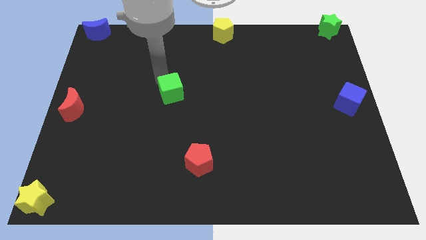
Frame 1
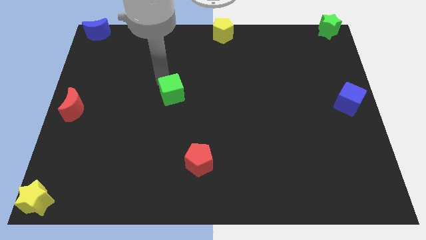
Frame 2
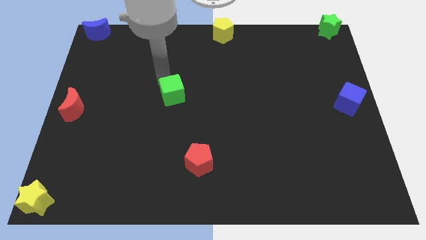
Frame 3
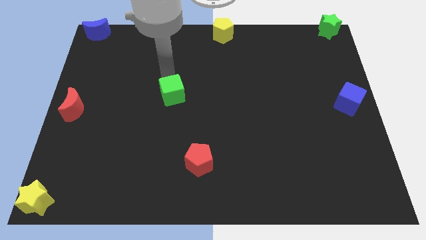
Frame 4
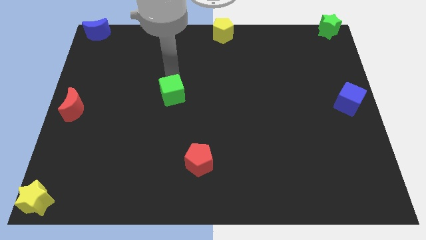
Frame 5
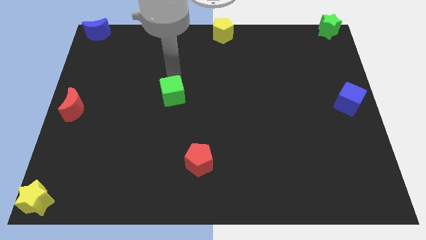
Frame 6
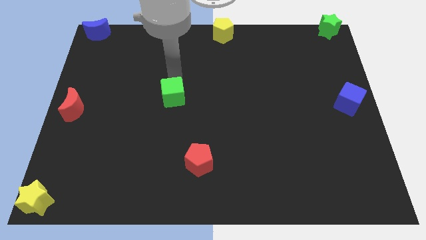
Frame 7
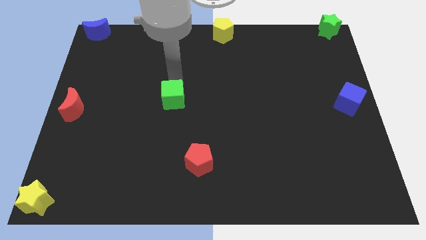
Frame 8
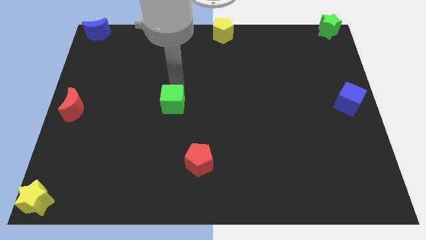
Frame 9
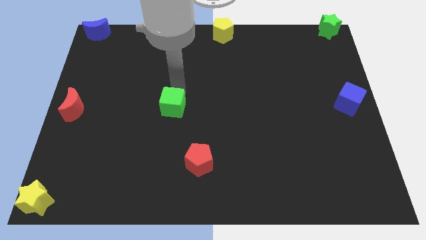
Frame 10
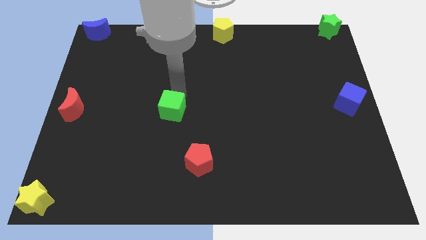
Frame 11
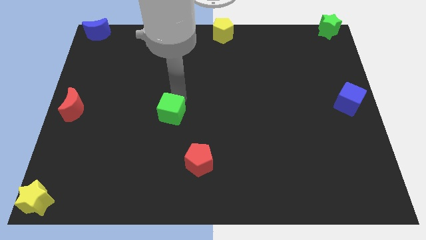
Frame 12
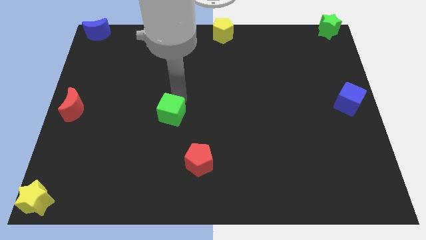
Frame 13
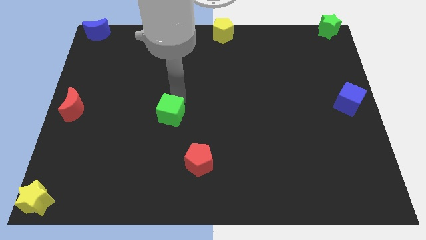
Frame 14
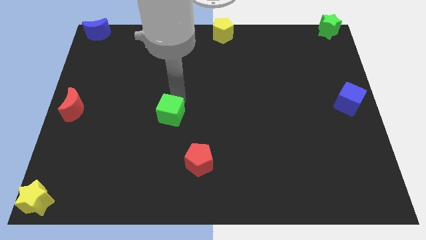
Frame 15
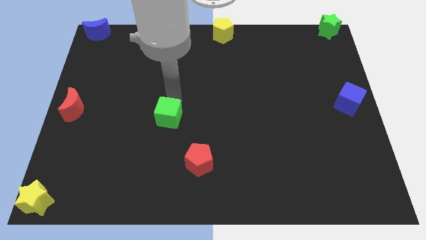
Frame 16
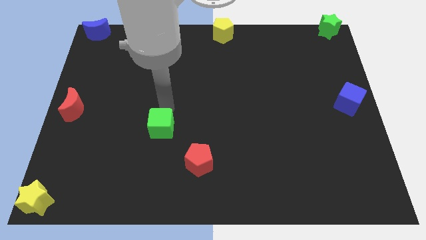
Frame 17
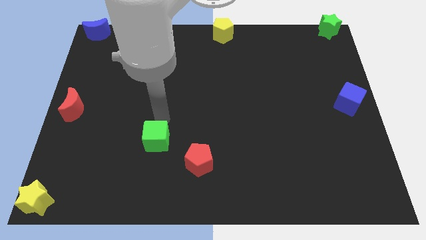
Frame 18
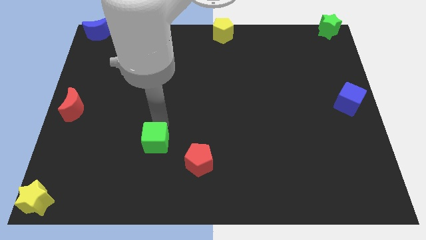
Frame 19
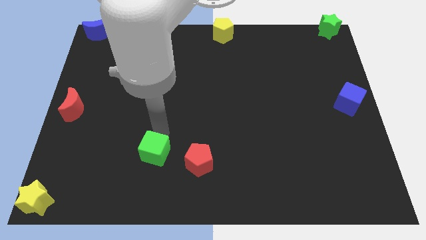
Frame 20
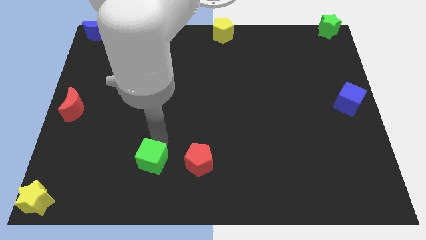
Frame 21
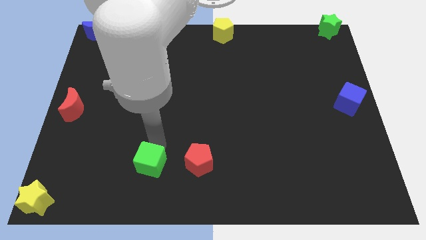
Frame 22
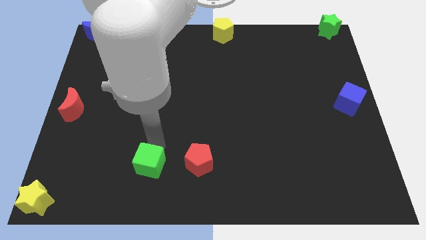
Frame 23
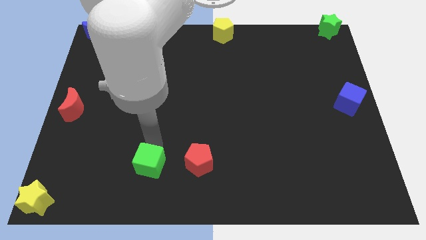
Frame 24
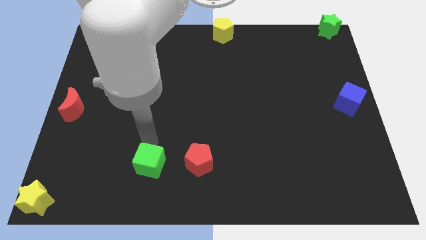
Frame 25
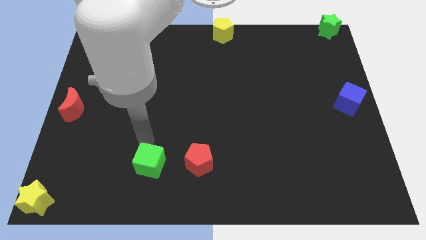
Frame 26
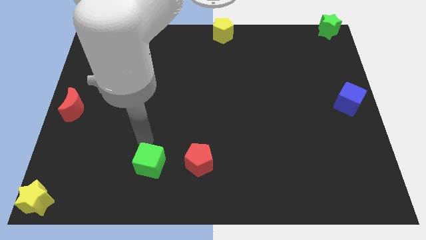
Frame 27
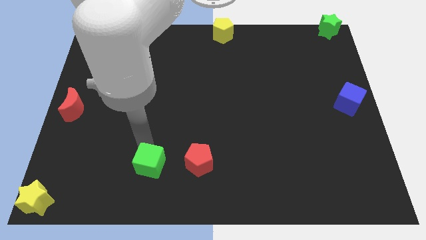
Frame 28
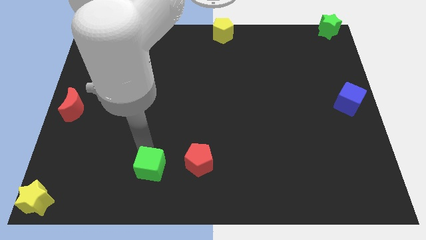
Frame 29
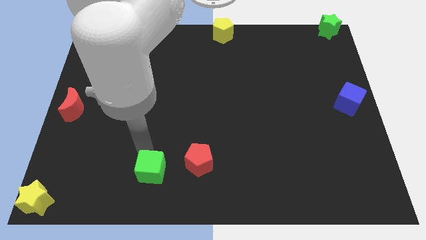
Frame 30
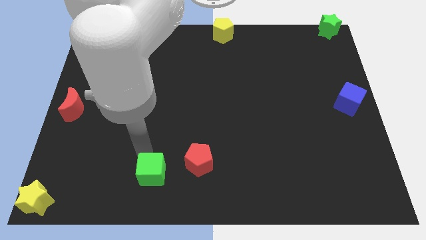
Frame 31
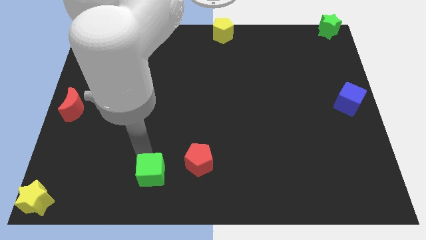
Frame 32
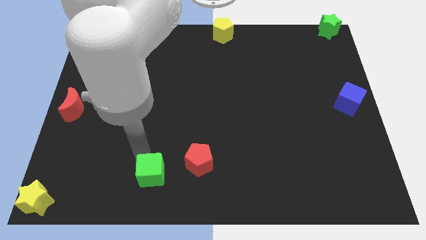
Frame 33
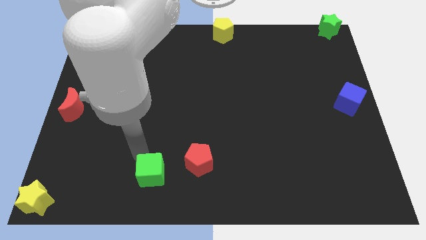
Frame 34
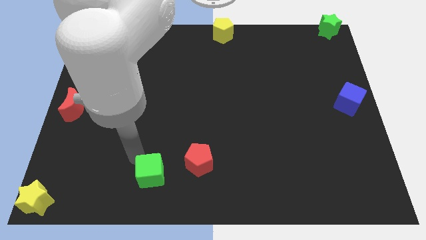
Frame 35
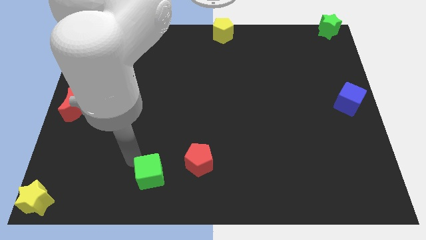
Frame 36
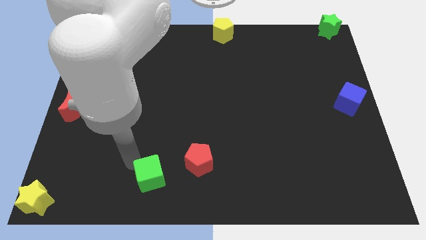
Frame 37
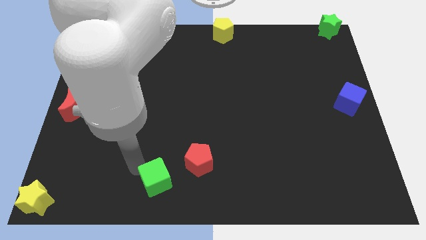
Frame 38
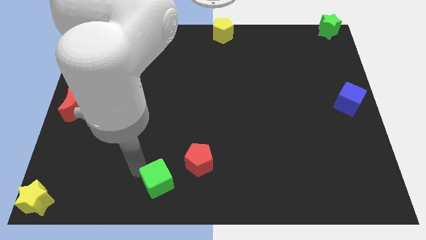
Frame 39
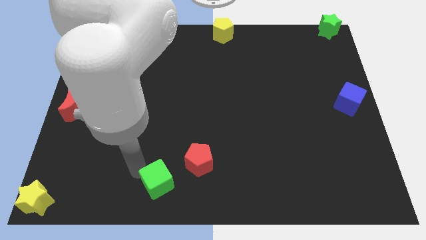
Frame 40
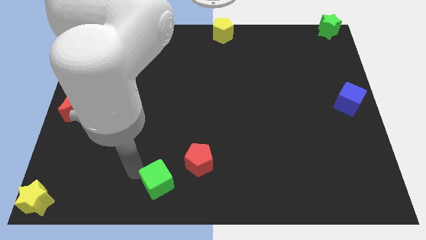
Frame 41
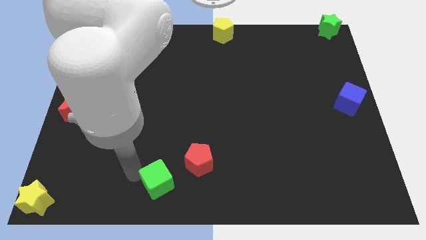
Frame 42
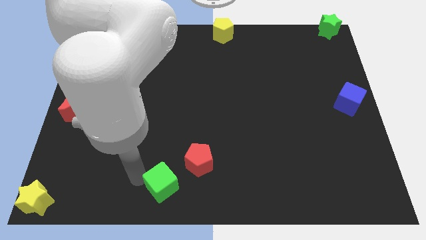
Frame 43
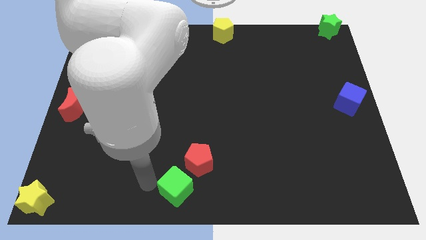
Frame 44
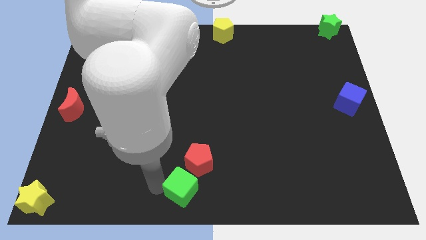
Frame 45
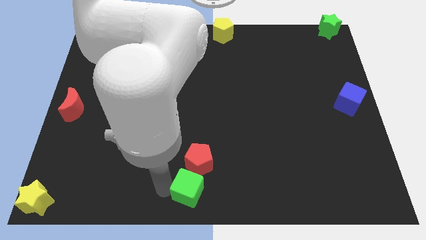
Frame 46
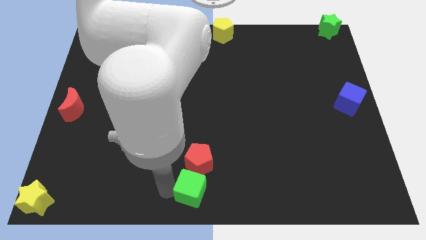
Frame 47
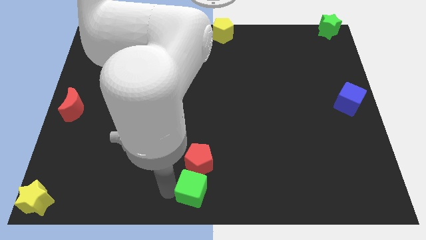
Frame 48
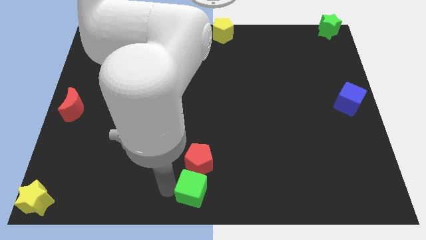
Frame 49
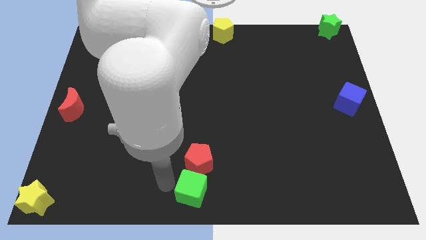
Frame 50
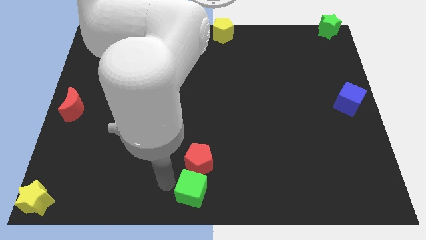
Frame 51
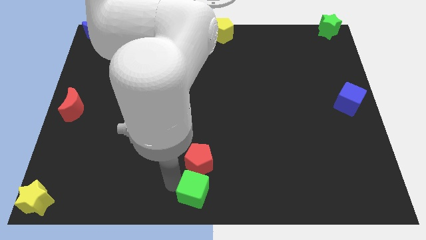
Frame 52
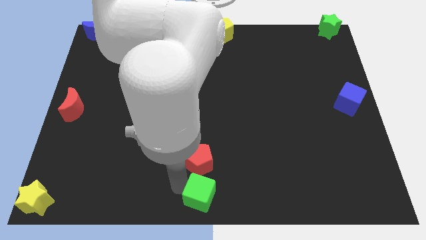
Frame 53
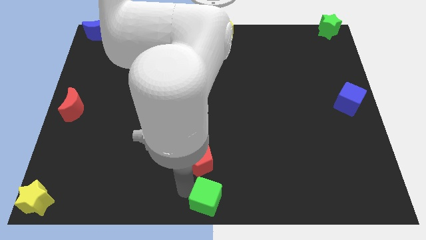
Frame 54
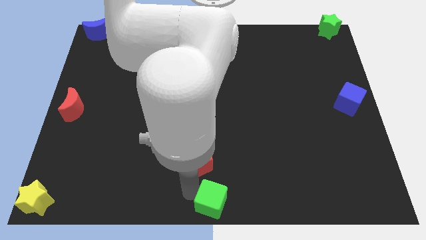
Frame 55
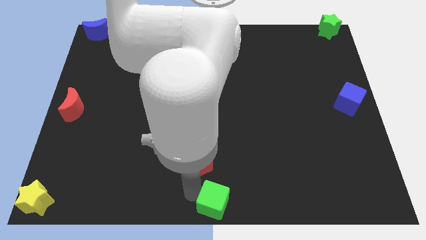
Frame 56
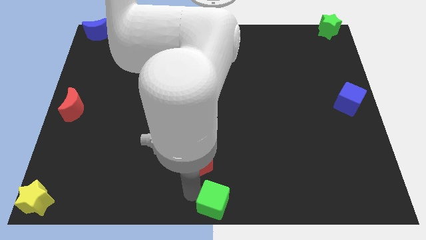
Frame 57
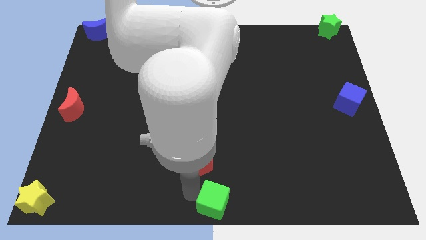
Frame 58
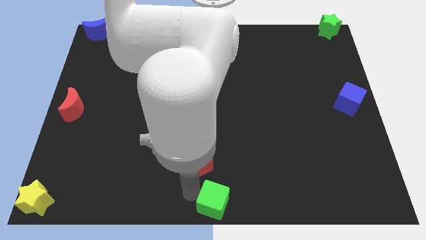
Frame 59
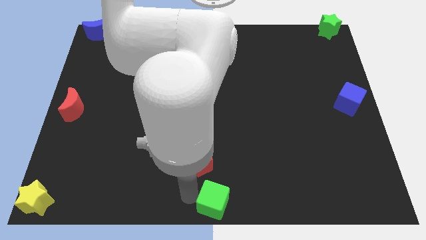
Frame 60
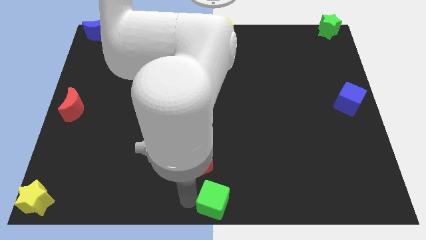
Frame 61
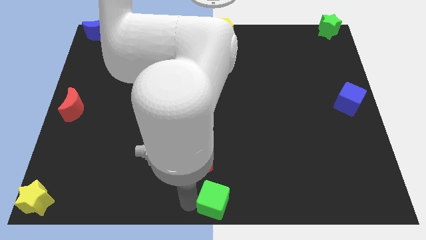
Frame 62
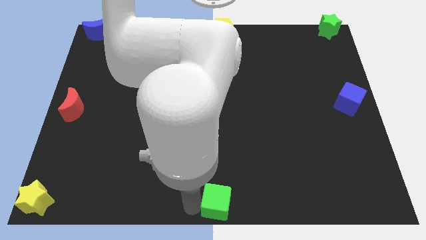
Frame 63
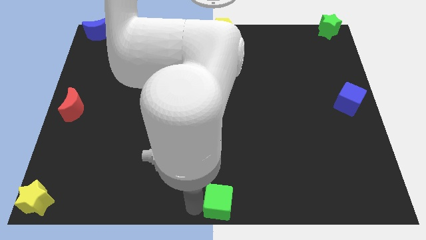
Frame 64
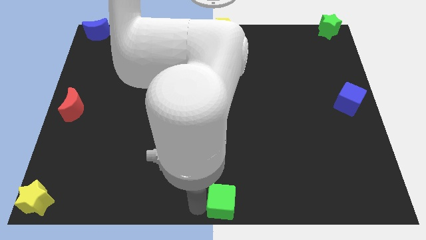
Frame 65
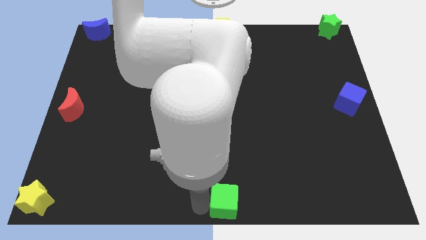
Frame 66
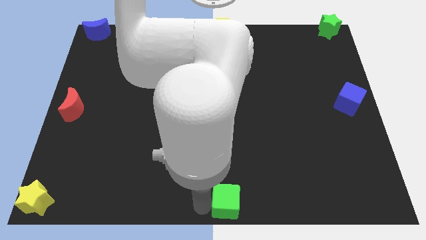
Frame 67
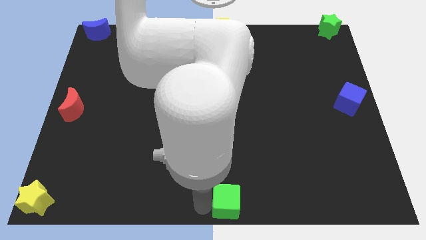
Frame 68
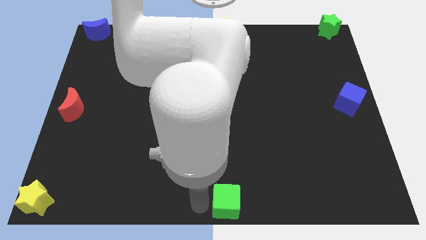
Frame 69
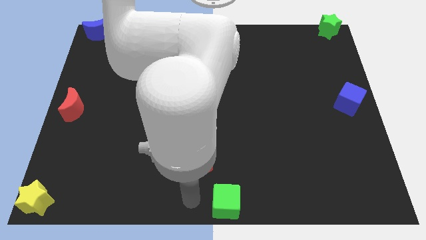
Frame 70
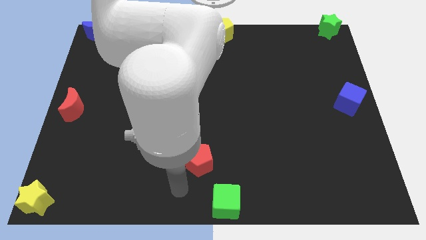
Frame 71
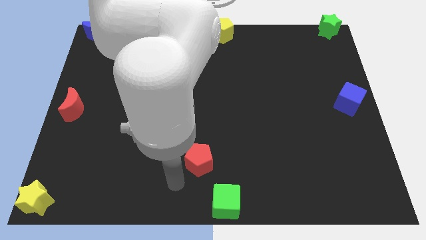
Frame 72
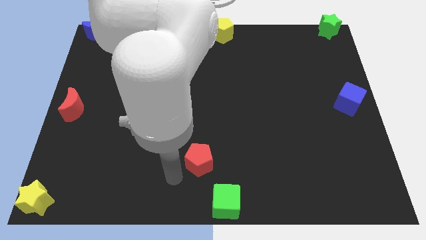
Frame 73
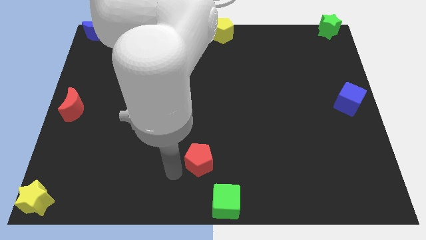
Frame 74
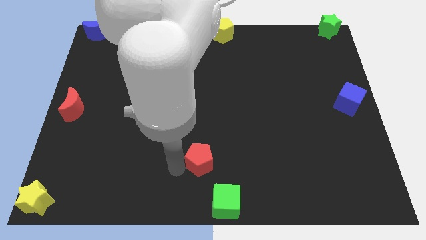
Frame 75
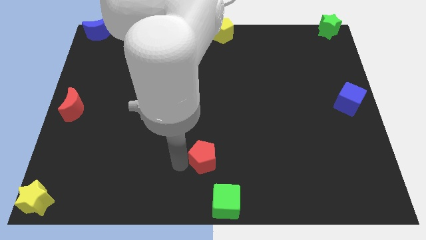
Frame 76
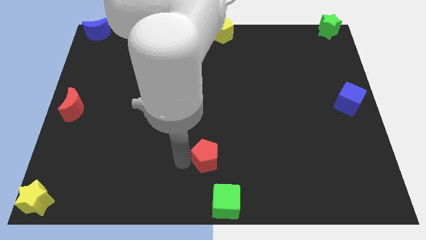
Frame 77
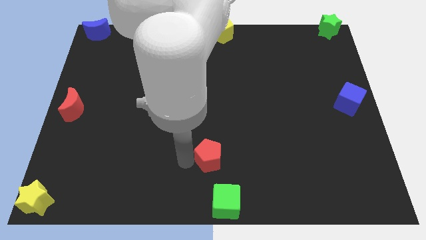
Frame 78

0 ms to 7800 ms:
push the green cube to the bottom center

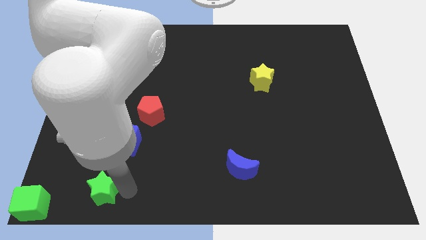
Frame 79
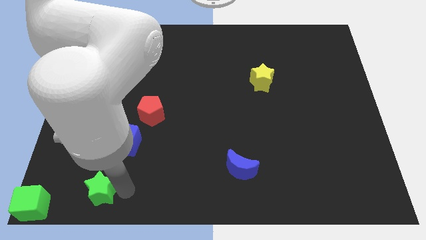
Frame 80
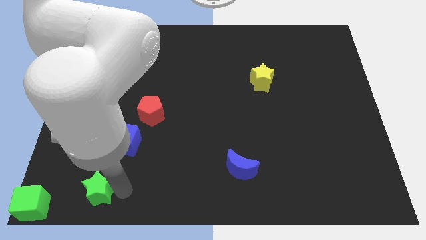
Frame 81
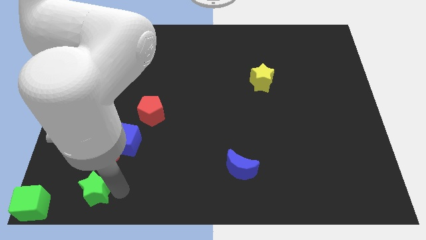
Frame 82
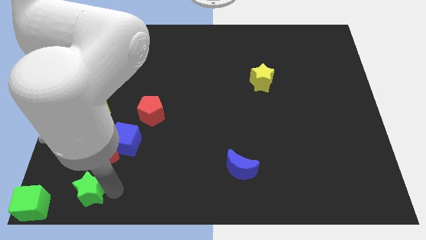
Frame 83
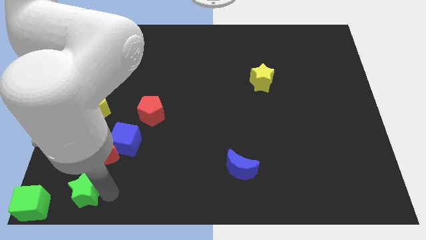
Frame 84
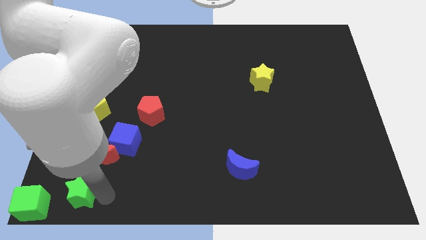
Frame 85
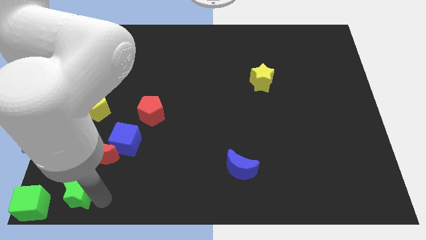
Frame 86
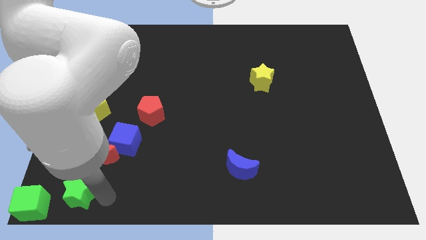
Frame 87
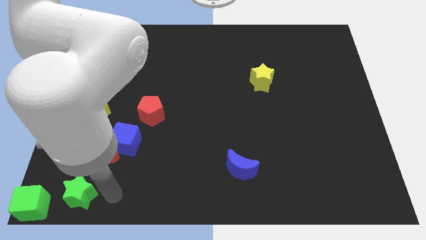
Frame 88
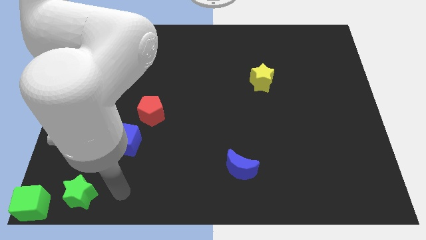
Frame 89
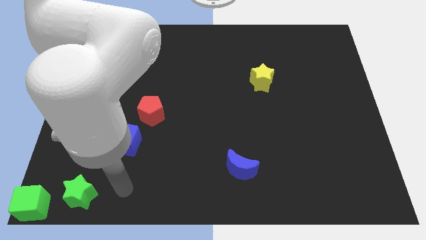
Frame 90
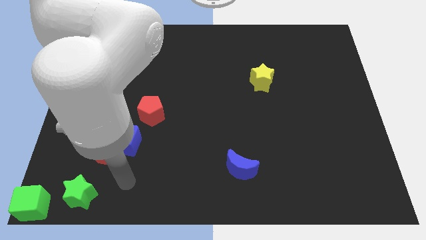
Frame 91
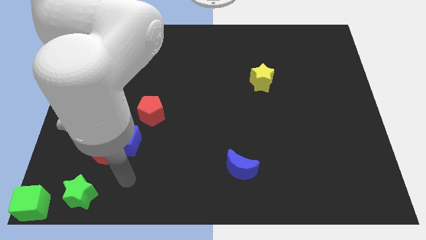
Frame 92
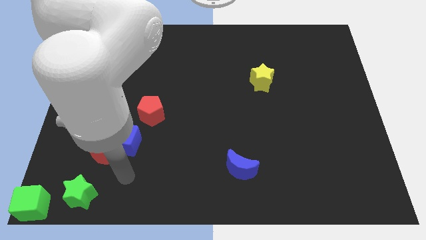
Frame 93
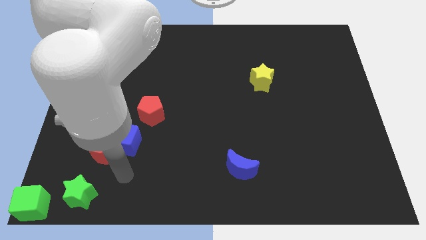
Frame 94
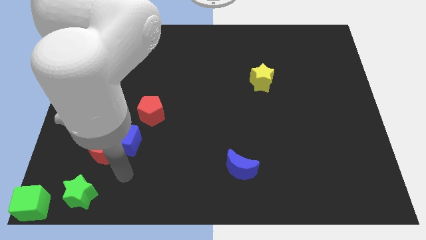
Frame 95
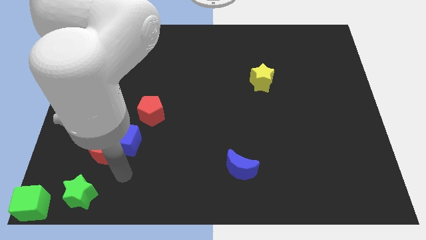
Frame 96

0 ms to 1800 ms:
push the green star right to the green cube bottom left of the board
